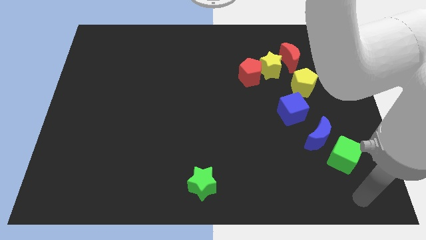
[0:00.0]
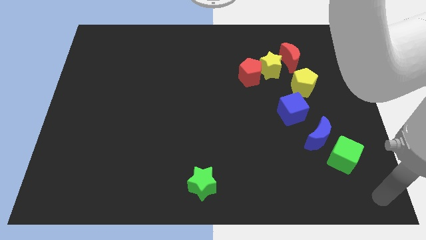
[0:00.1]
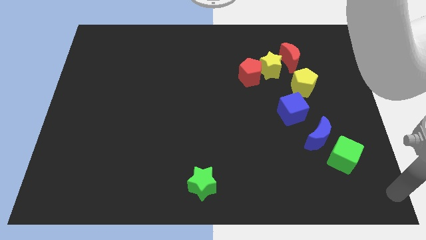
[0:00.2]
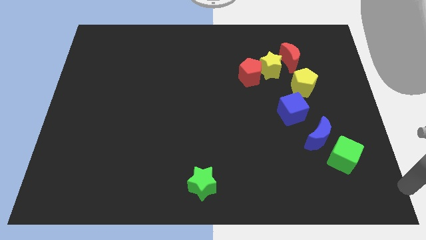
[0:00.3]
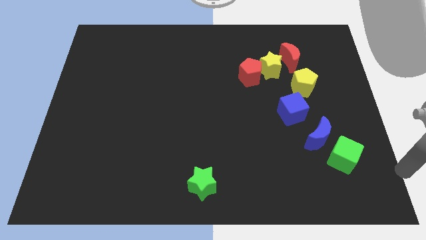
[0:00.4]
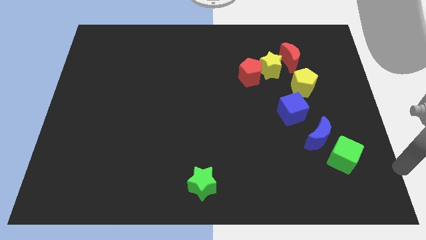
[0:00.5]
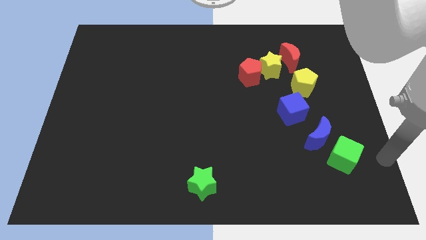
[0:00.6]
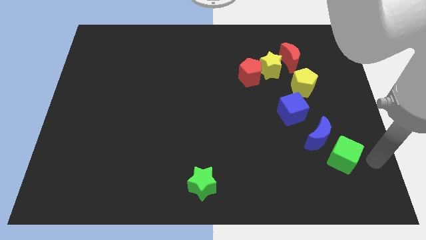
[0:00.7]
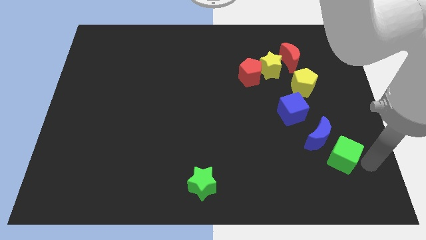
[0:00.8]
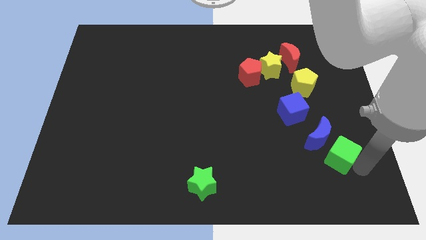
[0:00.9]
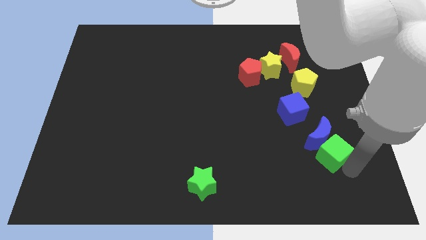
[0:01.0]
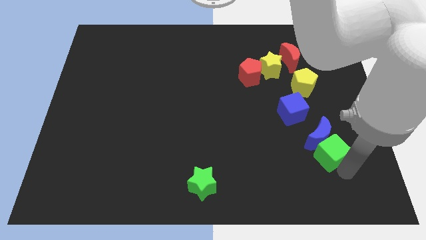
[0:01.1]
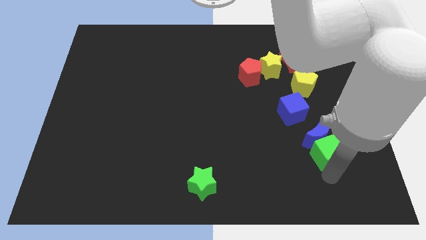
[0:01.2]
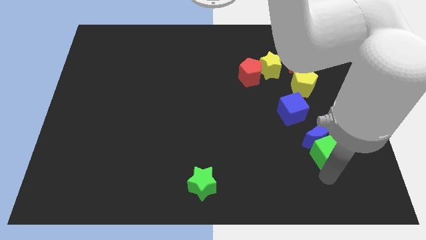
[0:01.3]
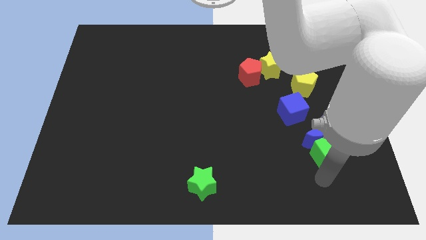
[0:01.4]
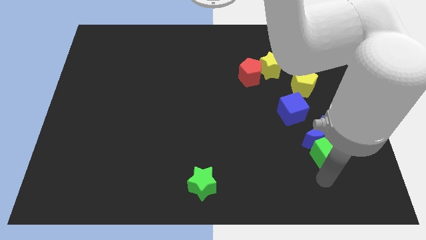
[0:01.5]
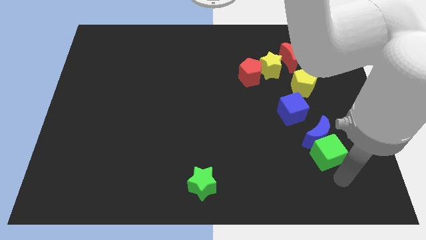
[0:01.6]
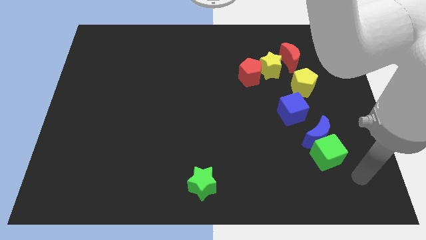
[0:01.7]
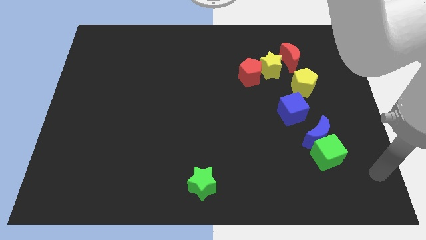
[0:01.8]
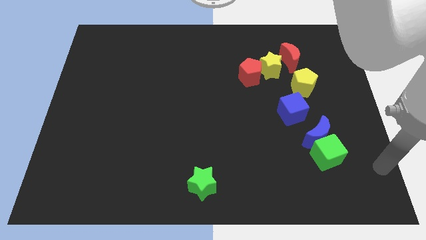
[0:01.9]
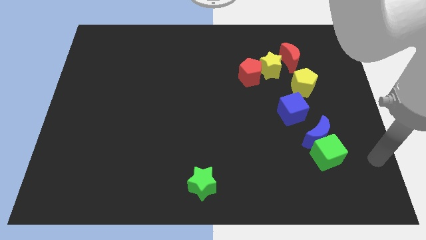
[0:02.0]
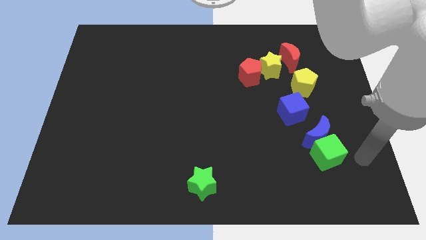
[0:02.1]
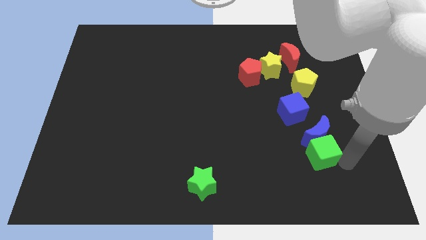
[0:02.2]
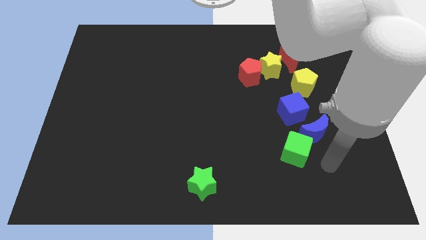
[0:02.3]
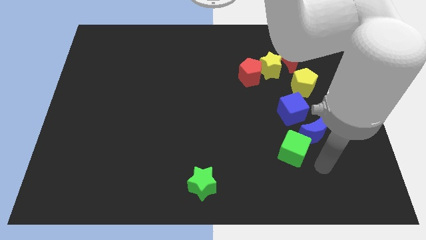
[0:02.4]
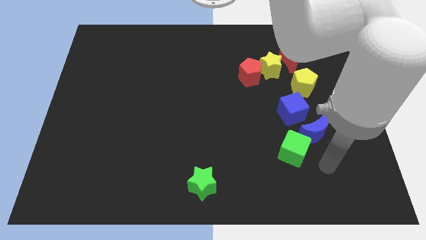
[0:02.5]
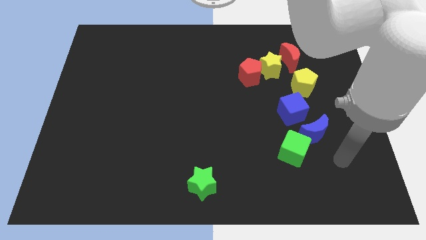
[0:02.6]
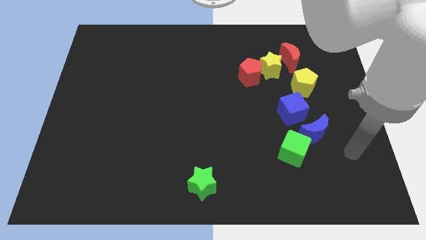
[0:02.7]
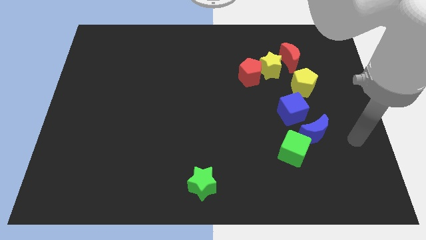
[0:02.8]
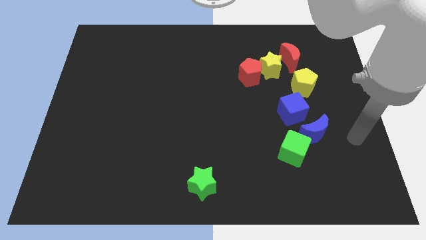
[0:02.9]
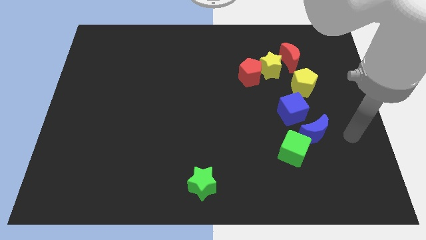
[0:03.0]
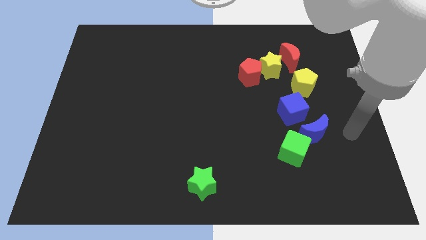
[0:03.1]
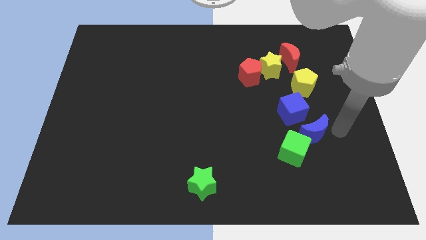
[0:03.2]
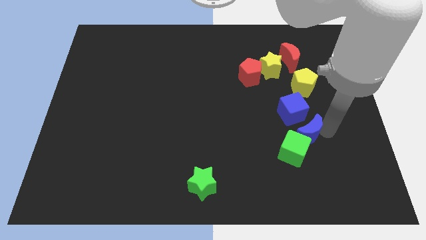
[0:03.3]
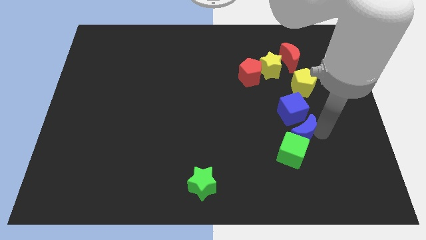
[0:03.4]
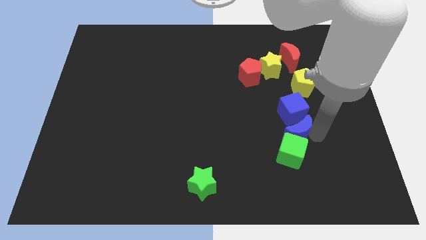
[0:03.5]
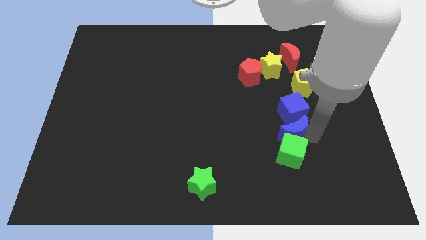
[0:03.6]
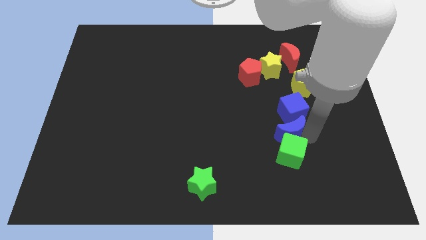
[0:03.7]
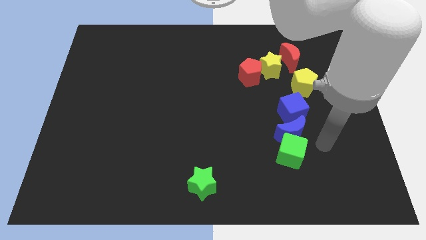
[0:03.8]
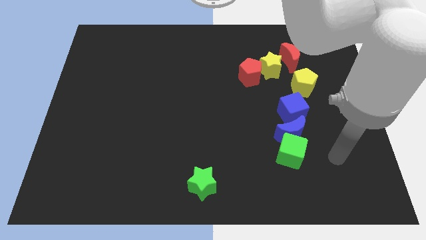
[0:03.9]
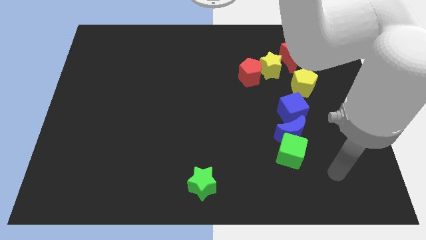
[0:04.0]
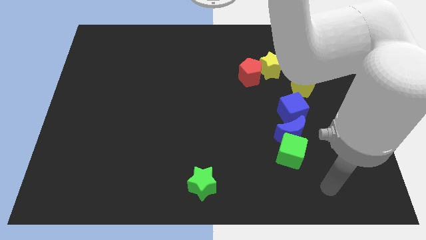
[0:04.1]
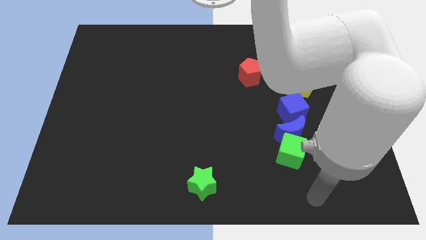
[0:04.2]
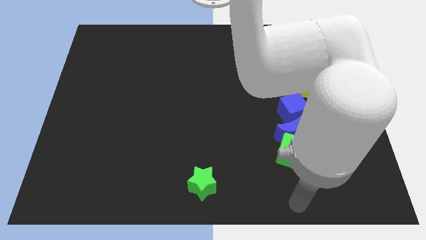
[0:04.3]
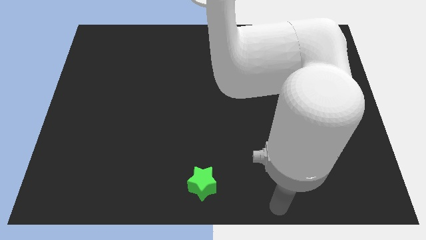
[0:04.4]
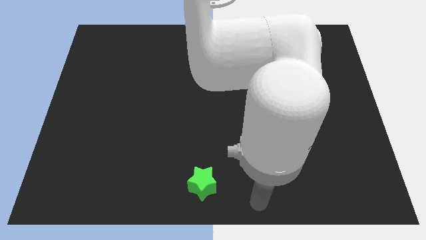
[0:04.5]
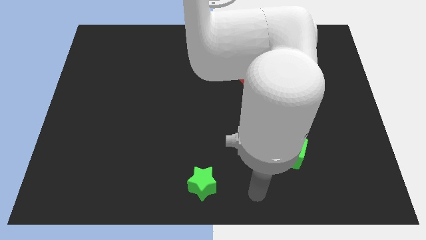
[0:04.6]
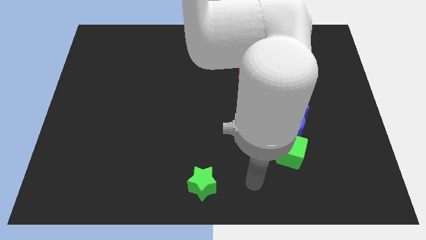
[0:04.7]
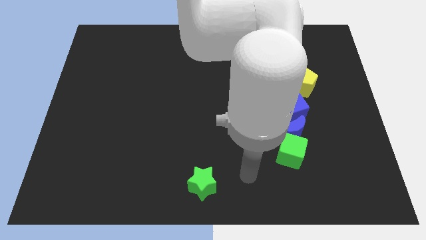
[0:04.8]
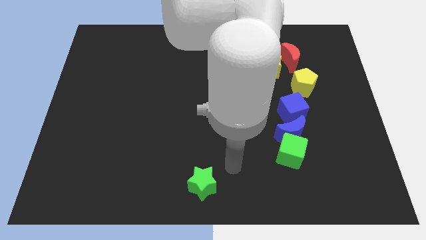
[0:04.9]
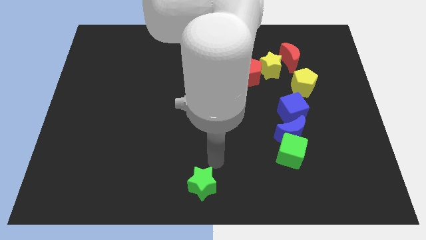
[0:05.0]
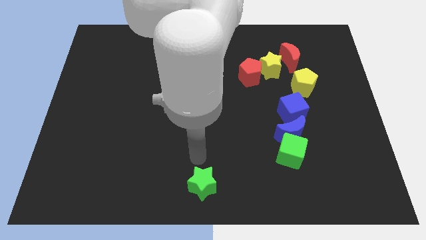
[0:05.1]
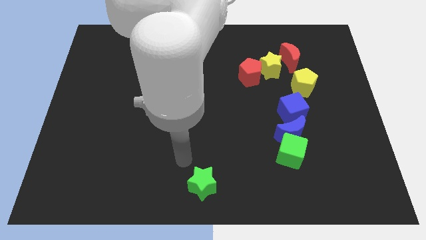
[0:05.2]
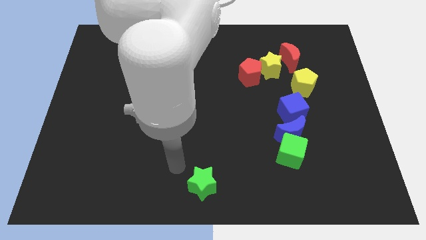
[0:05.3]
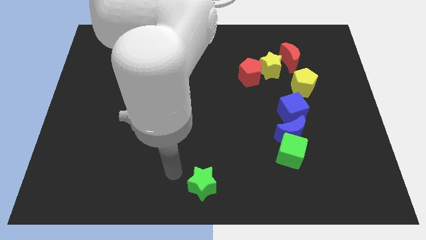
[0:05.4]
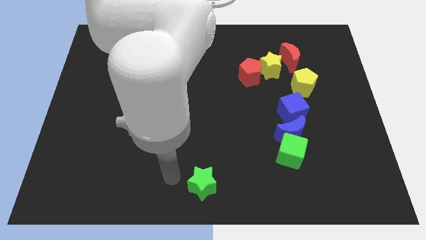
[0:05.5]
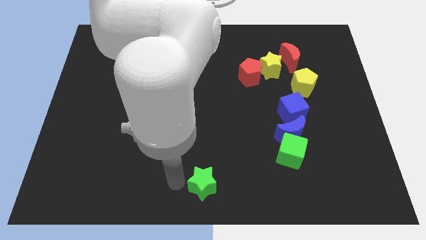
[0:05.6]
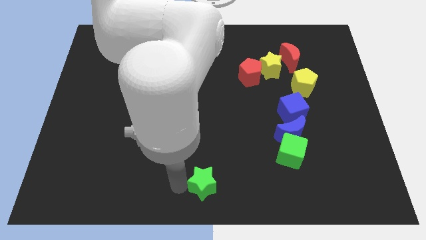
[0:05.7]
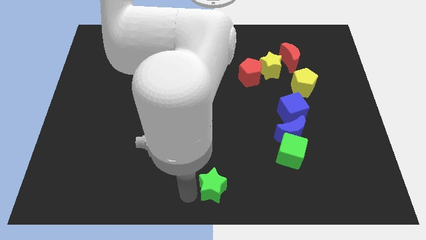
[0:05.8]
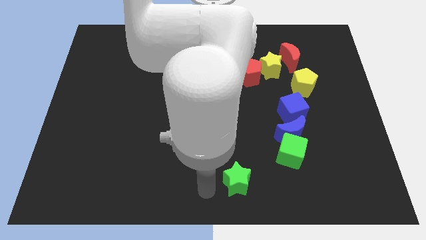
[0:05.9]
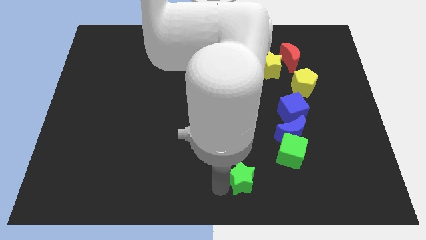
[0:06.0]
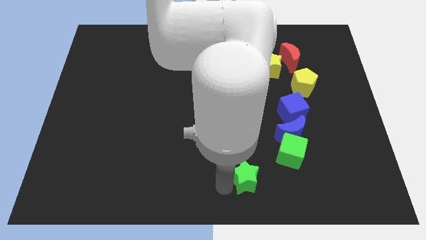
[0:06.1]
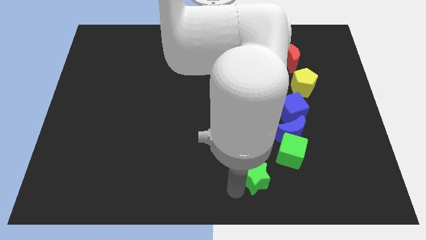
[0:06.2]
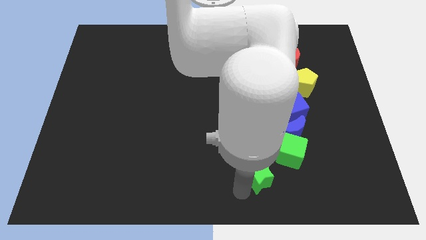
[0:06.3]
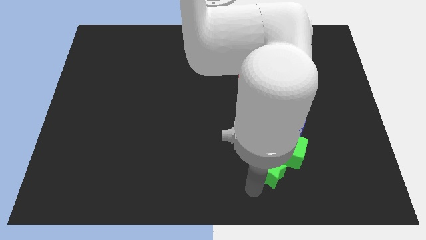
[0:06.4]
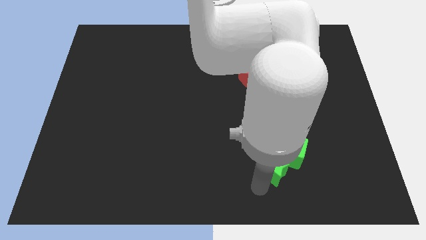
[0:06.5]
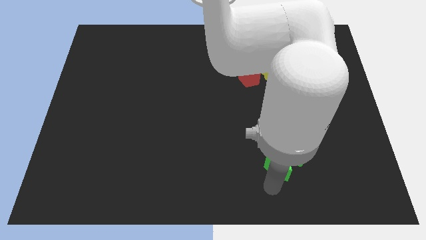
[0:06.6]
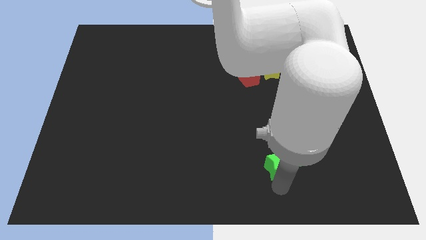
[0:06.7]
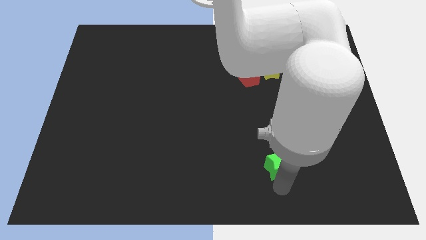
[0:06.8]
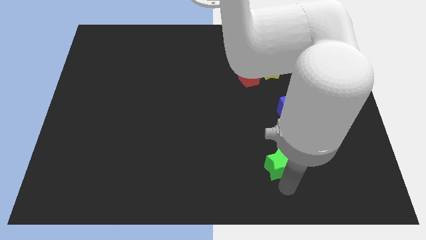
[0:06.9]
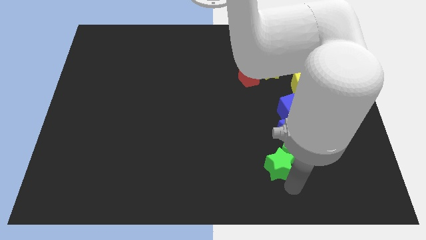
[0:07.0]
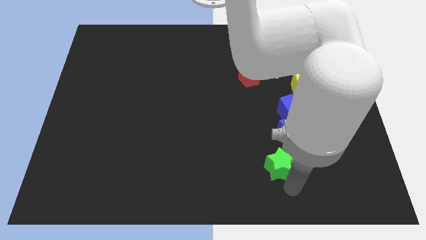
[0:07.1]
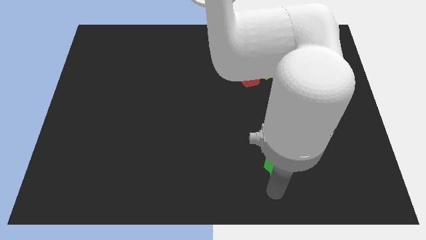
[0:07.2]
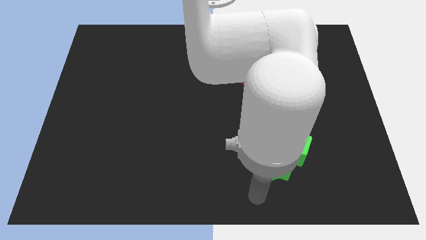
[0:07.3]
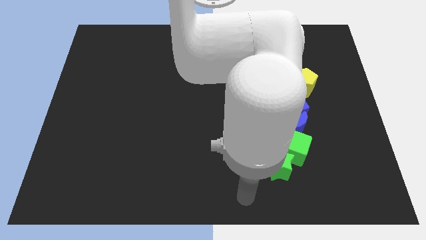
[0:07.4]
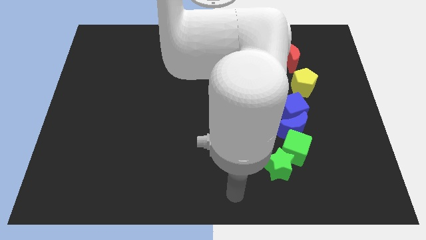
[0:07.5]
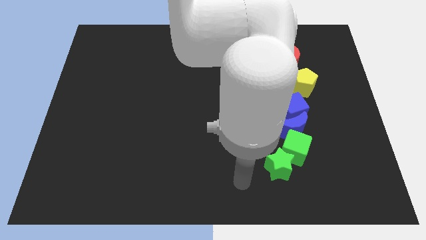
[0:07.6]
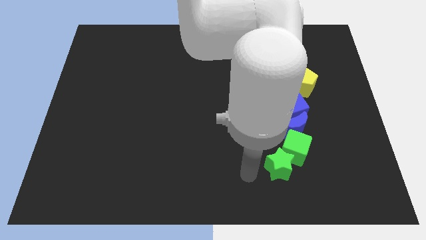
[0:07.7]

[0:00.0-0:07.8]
group up the blue blocks and green blocks at the right side of the table

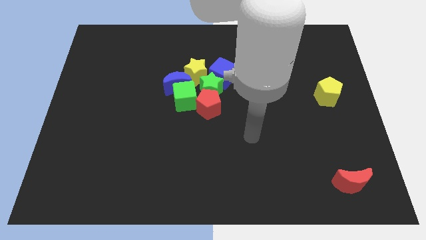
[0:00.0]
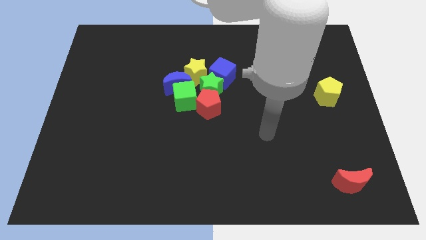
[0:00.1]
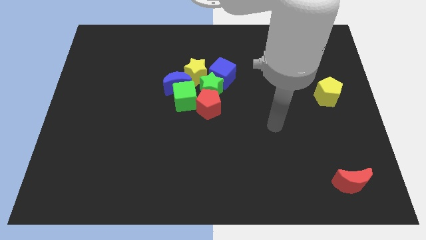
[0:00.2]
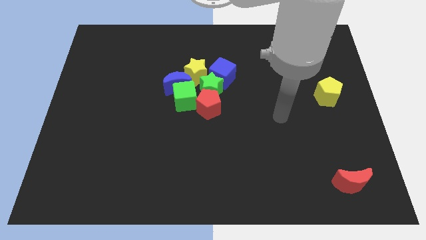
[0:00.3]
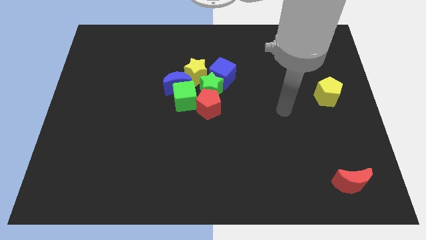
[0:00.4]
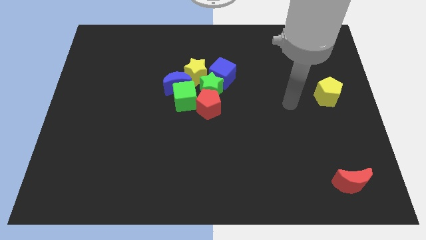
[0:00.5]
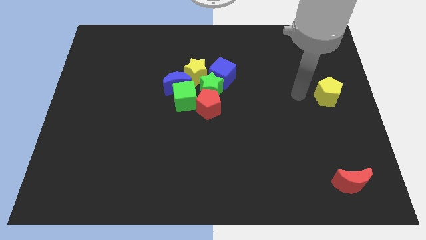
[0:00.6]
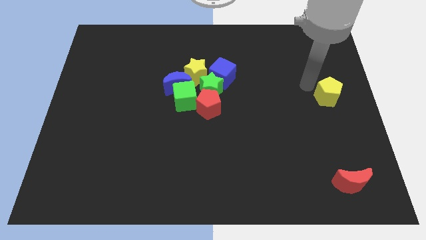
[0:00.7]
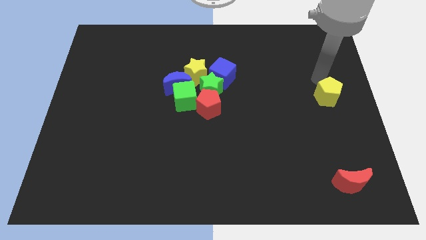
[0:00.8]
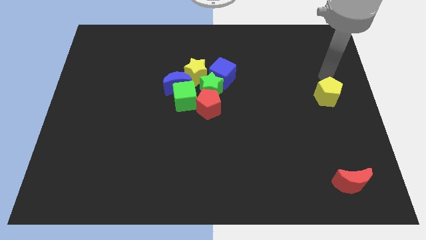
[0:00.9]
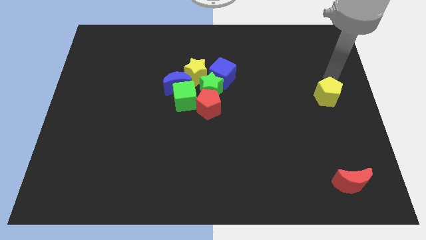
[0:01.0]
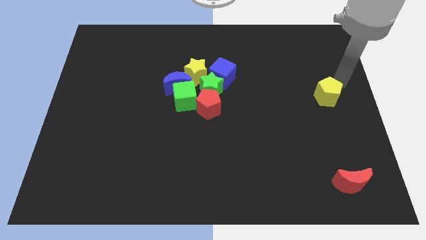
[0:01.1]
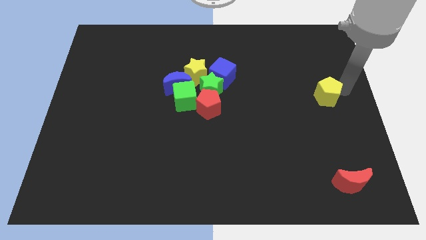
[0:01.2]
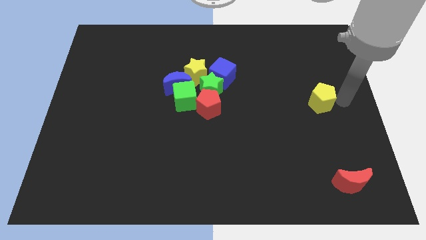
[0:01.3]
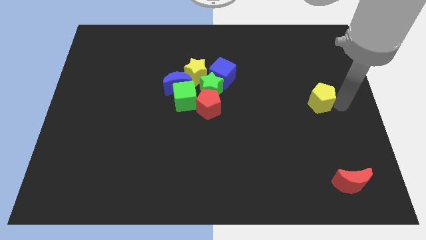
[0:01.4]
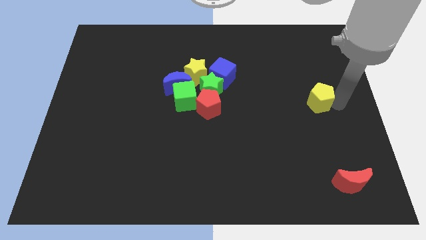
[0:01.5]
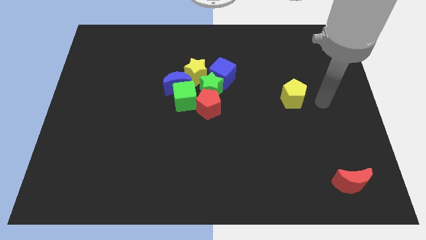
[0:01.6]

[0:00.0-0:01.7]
push the yellow pentagon to the left side of the board
